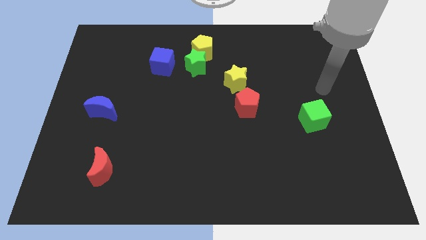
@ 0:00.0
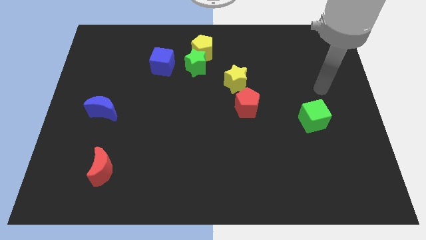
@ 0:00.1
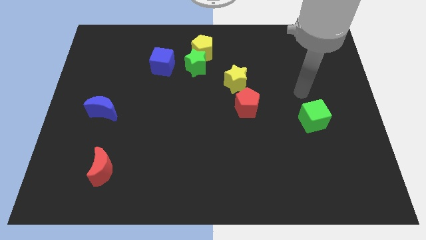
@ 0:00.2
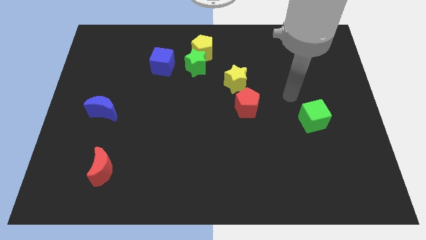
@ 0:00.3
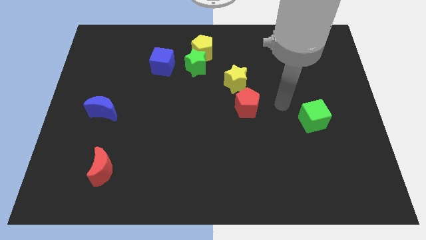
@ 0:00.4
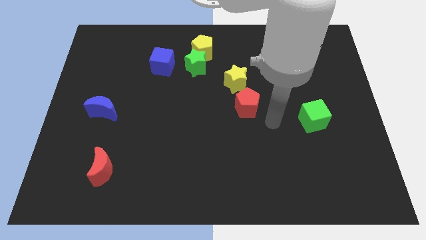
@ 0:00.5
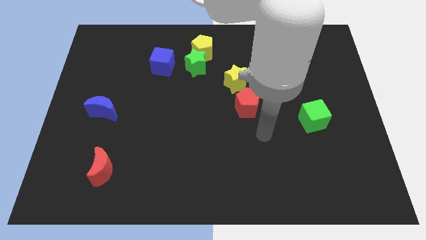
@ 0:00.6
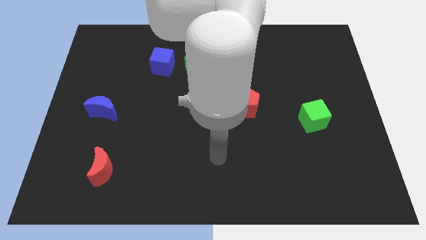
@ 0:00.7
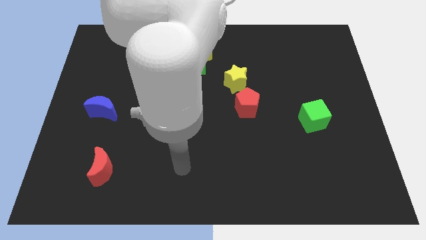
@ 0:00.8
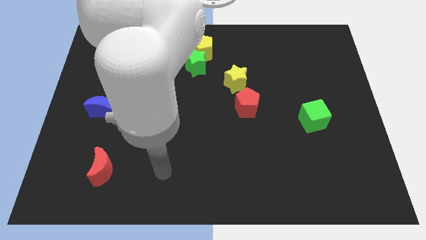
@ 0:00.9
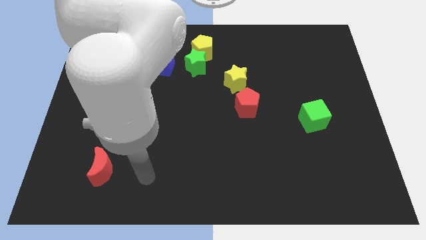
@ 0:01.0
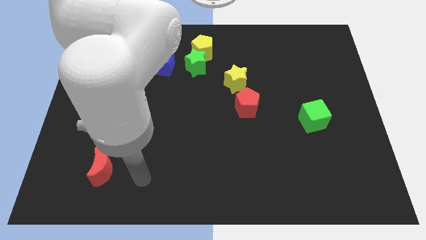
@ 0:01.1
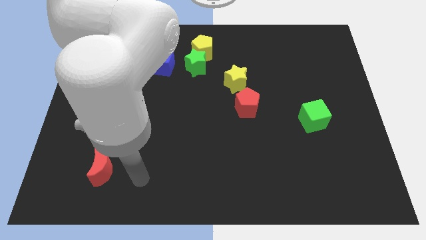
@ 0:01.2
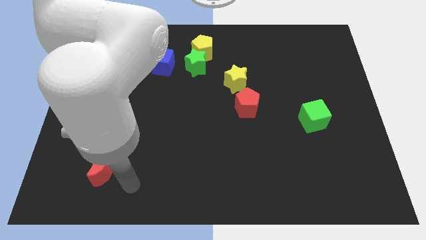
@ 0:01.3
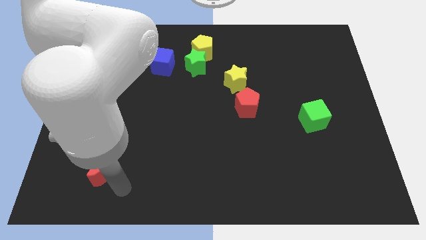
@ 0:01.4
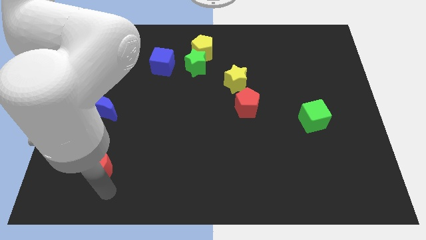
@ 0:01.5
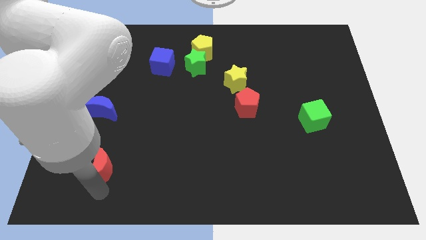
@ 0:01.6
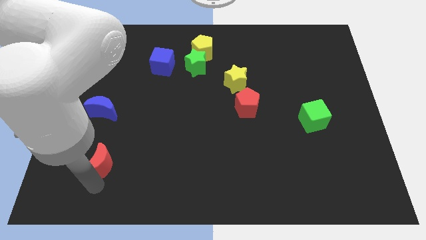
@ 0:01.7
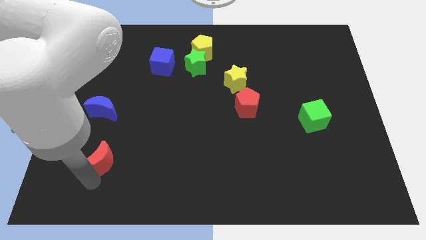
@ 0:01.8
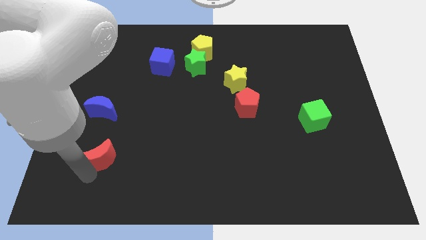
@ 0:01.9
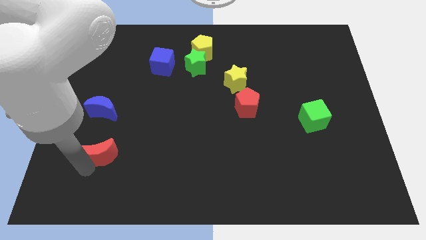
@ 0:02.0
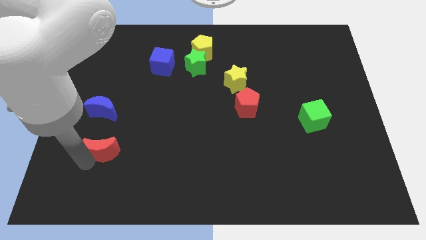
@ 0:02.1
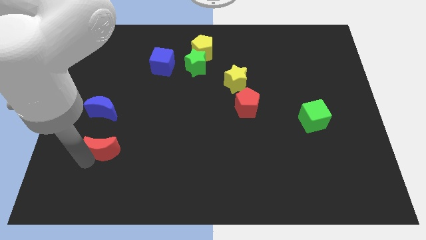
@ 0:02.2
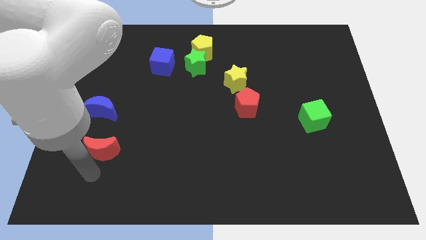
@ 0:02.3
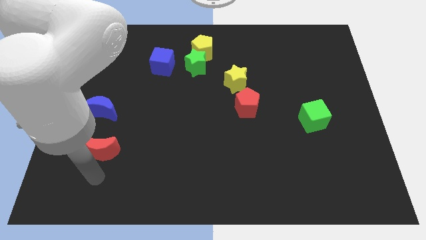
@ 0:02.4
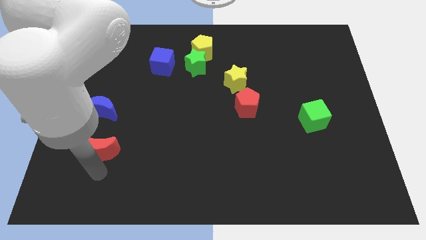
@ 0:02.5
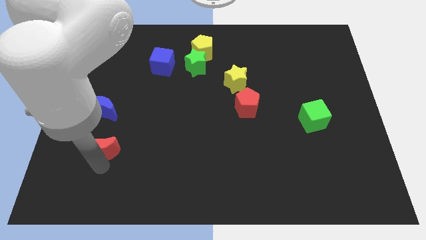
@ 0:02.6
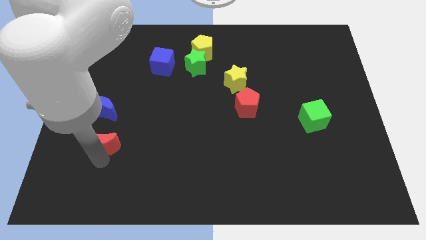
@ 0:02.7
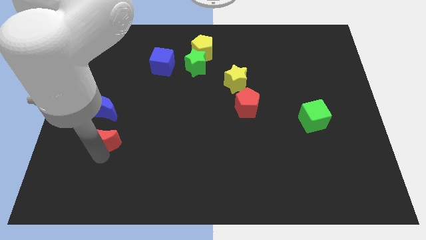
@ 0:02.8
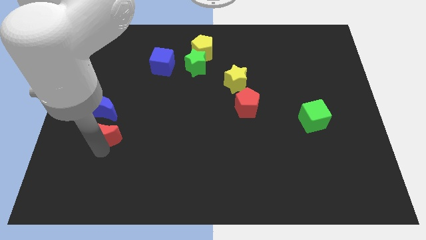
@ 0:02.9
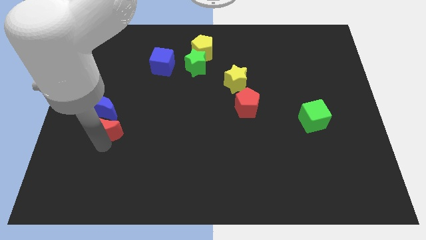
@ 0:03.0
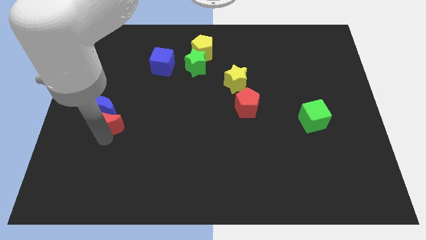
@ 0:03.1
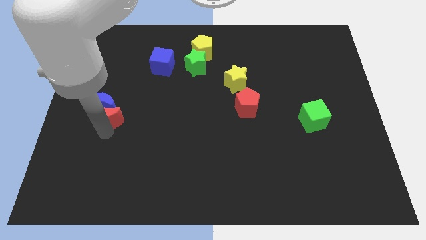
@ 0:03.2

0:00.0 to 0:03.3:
slide the red moon to the blue moon

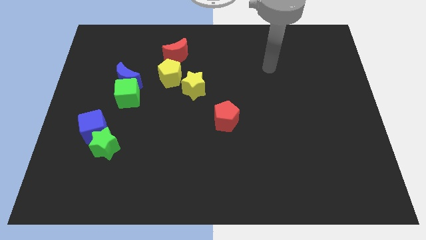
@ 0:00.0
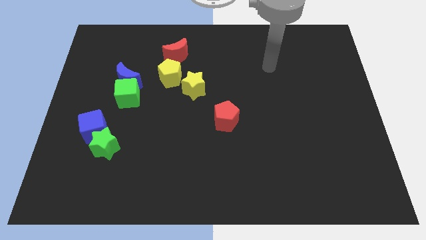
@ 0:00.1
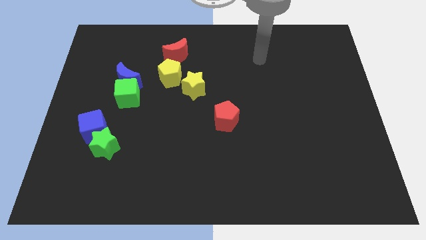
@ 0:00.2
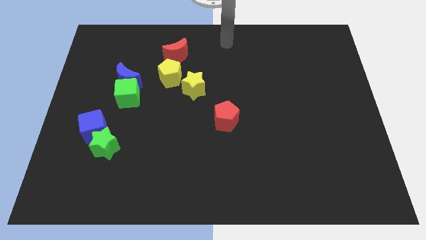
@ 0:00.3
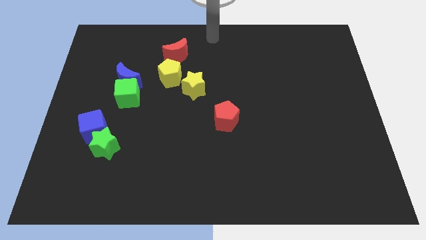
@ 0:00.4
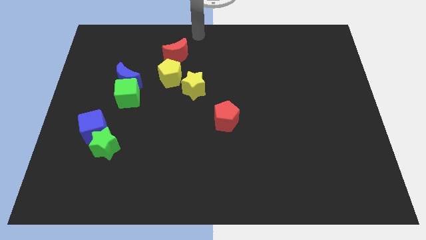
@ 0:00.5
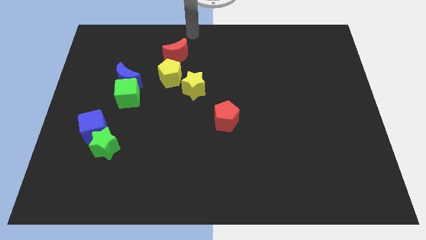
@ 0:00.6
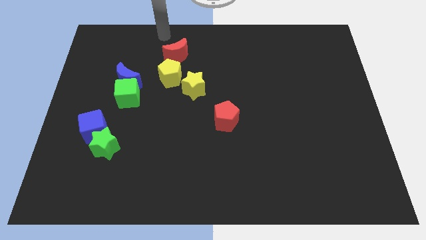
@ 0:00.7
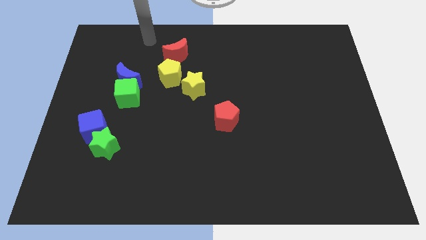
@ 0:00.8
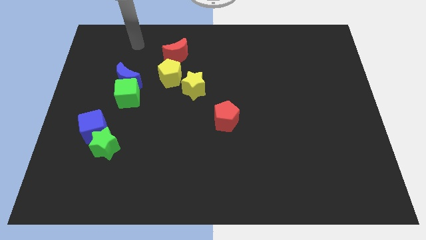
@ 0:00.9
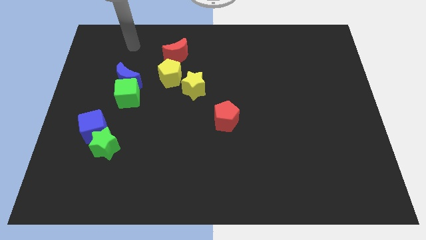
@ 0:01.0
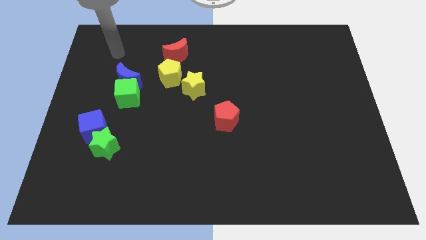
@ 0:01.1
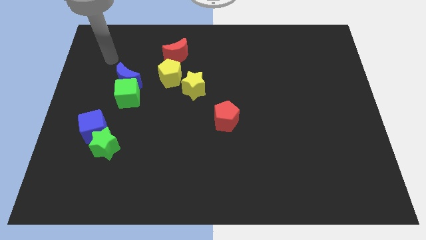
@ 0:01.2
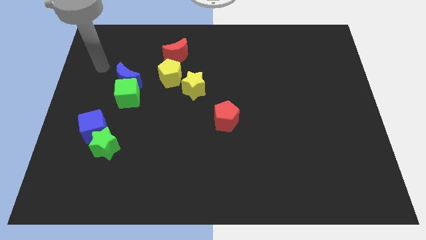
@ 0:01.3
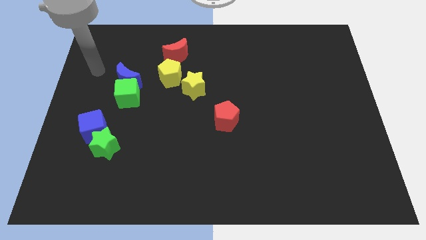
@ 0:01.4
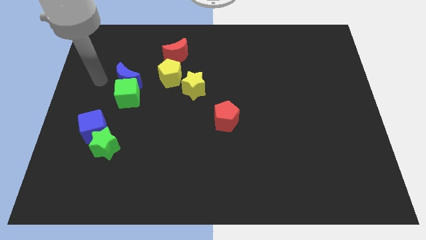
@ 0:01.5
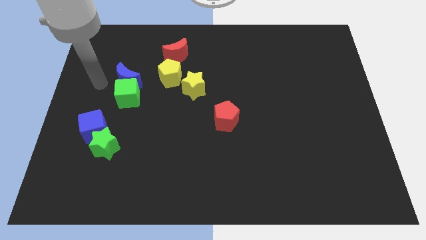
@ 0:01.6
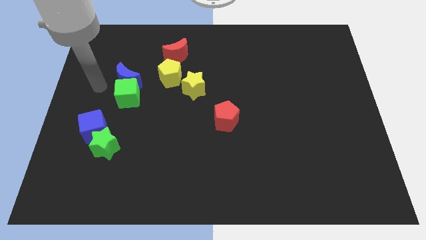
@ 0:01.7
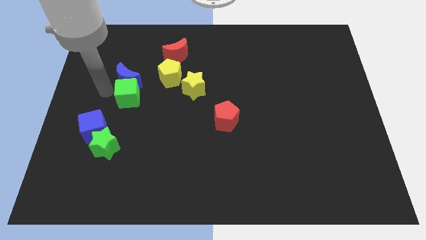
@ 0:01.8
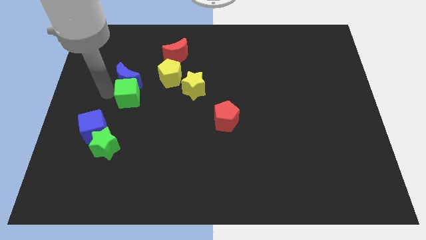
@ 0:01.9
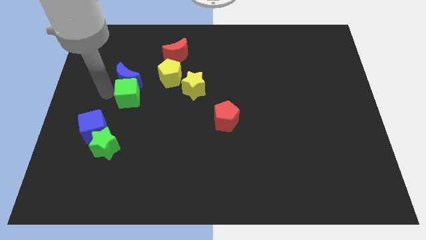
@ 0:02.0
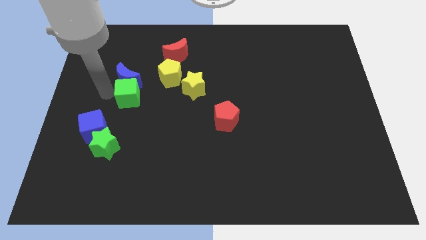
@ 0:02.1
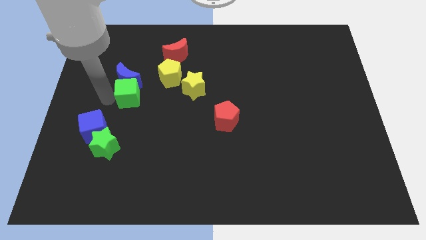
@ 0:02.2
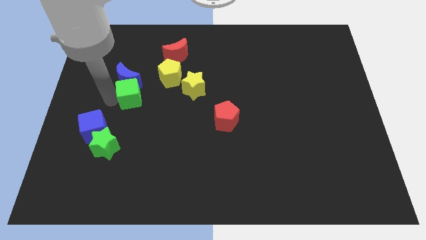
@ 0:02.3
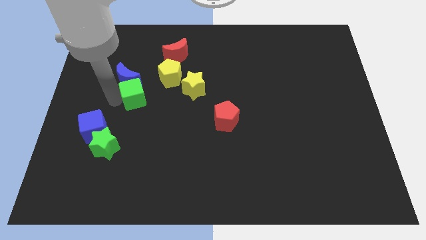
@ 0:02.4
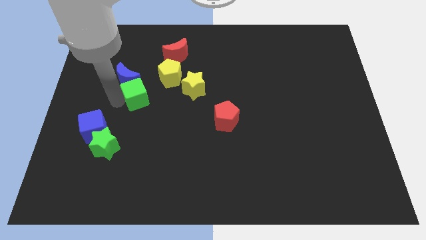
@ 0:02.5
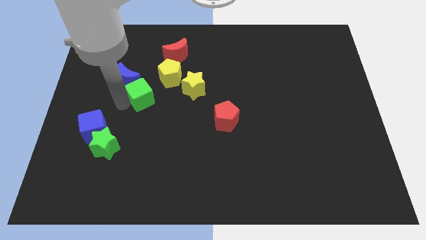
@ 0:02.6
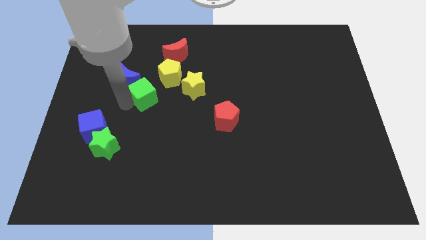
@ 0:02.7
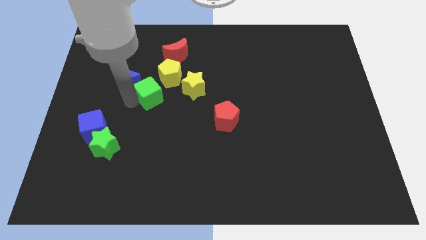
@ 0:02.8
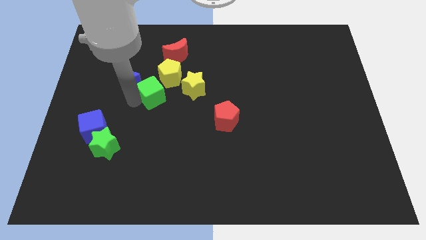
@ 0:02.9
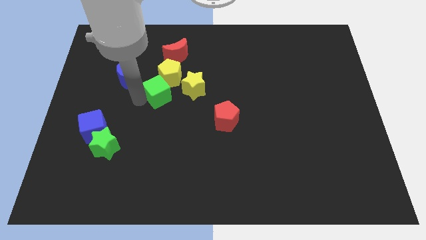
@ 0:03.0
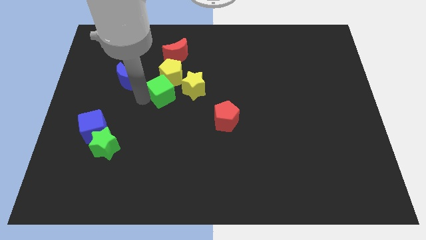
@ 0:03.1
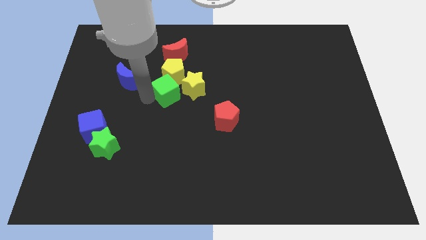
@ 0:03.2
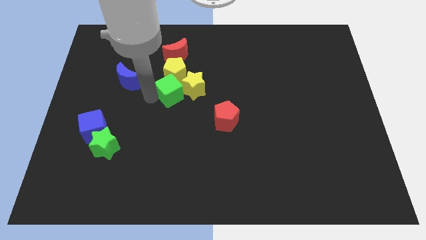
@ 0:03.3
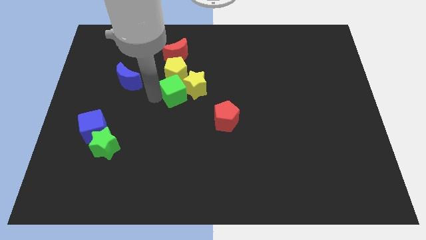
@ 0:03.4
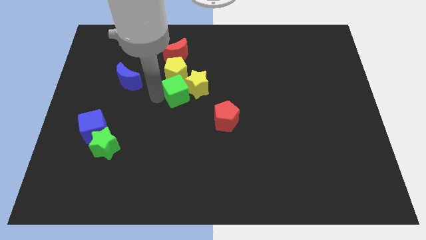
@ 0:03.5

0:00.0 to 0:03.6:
move the green cube to the yellow star

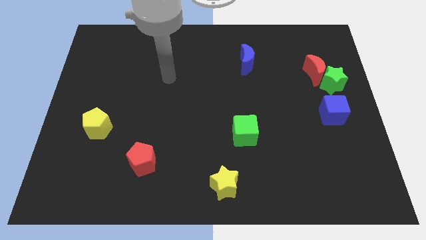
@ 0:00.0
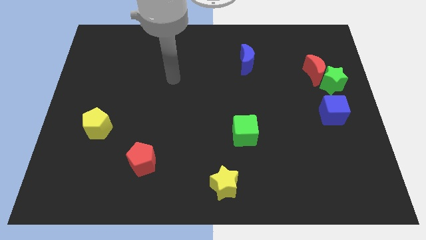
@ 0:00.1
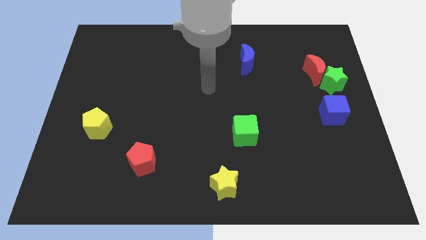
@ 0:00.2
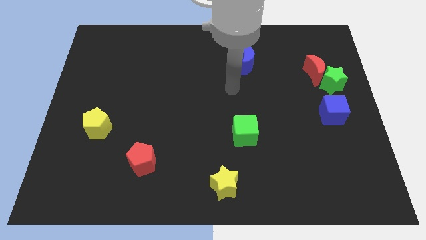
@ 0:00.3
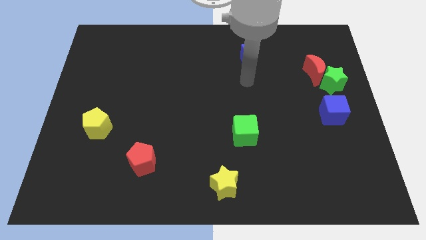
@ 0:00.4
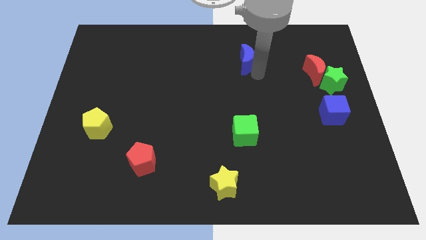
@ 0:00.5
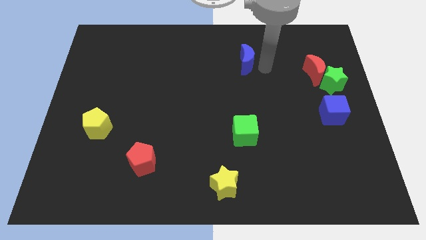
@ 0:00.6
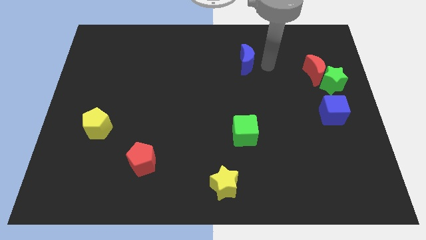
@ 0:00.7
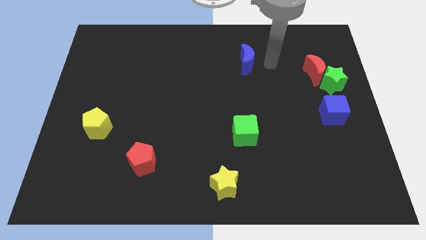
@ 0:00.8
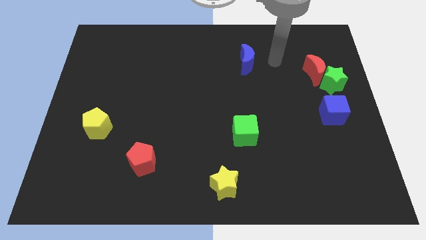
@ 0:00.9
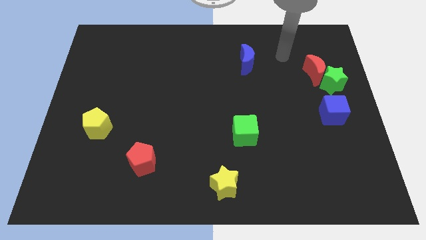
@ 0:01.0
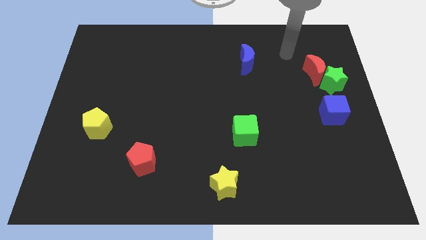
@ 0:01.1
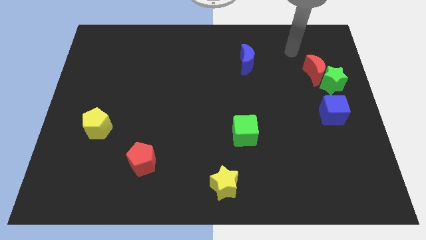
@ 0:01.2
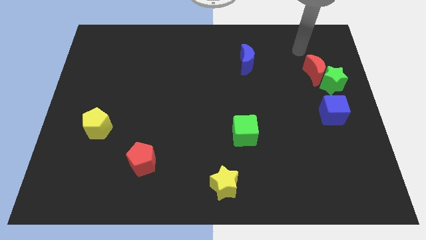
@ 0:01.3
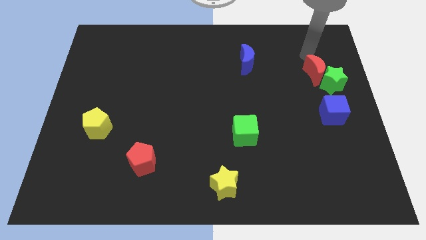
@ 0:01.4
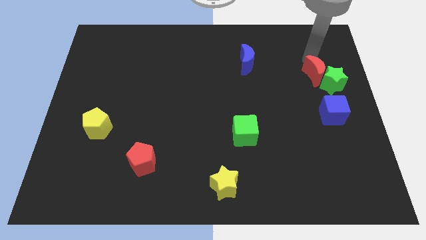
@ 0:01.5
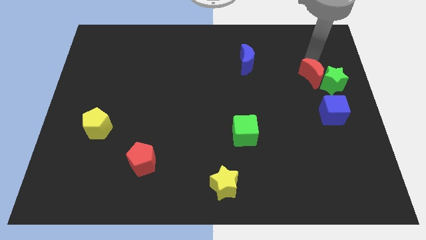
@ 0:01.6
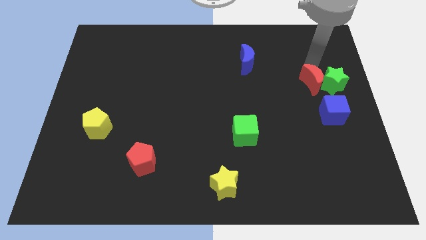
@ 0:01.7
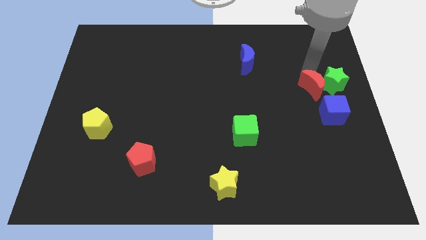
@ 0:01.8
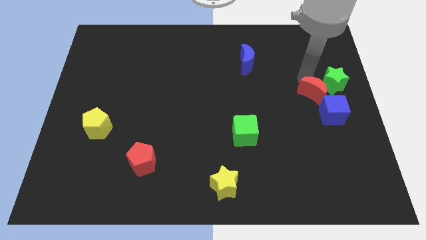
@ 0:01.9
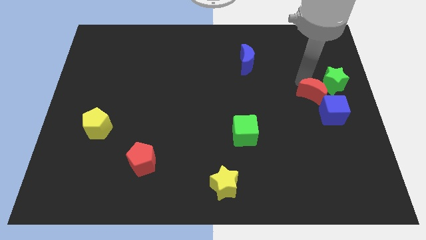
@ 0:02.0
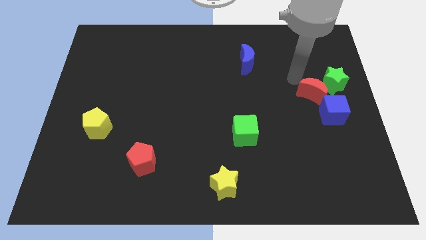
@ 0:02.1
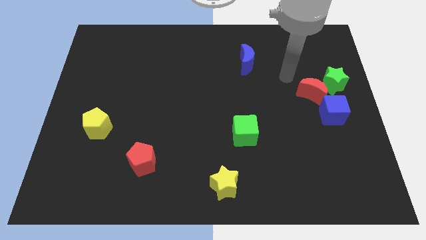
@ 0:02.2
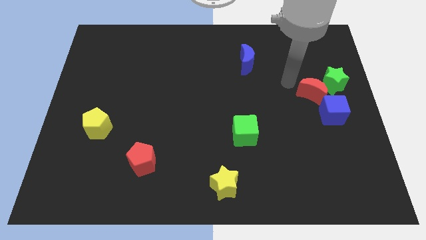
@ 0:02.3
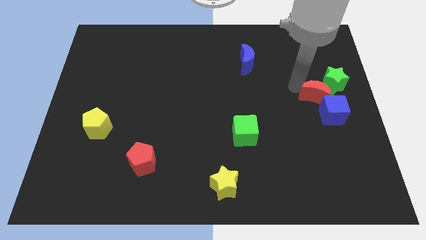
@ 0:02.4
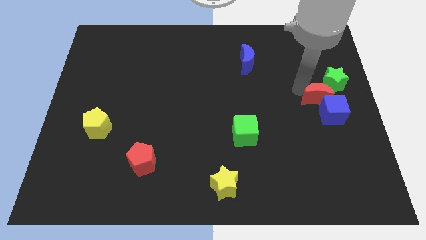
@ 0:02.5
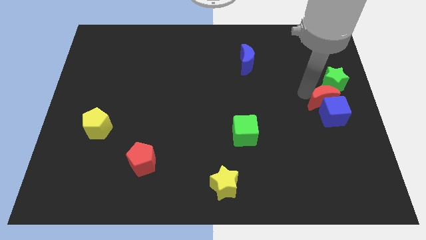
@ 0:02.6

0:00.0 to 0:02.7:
slide the red moon to the blue cube
